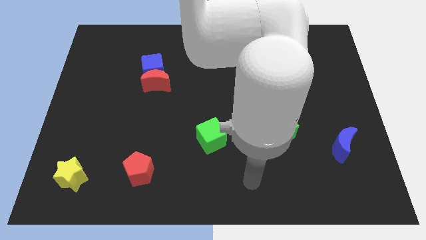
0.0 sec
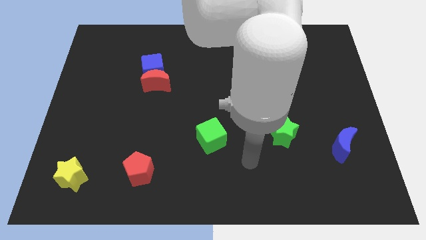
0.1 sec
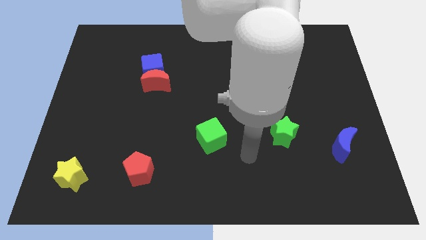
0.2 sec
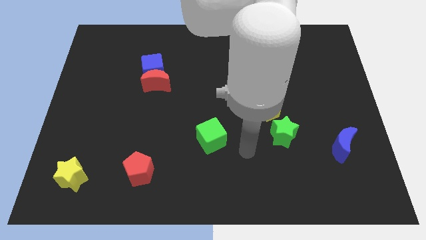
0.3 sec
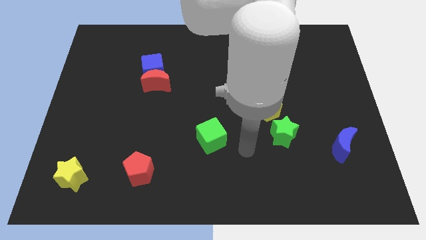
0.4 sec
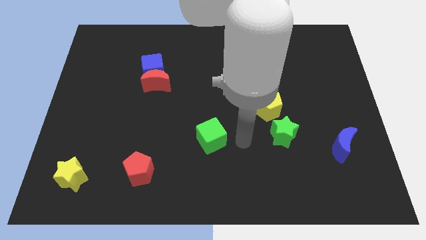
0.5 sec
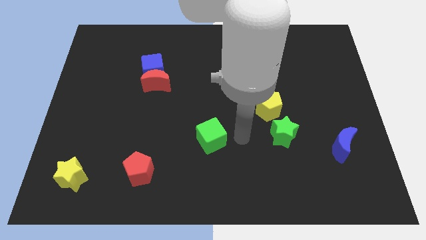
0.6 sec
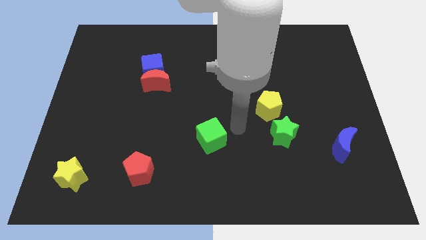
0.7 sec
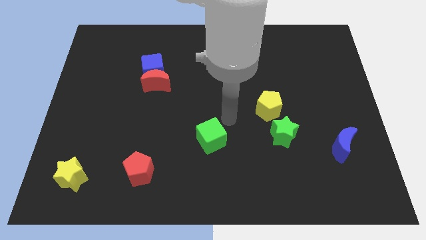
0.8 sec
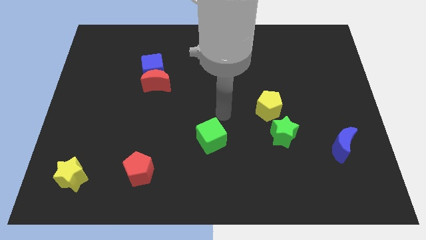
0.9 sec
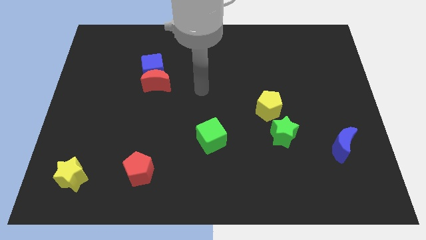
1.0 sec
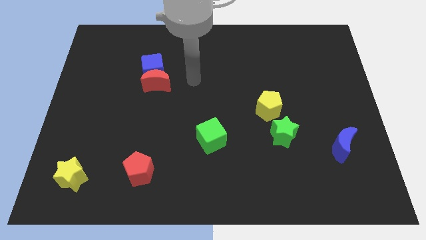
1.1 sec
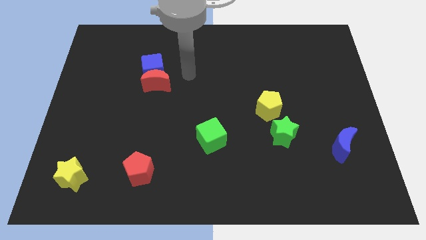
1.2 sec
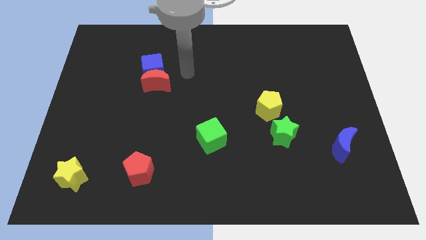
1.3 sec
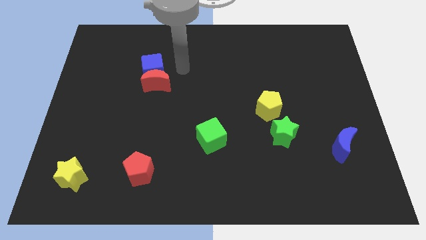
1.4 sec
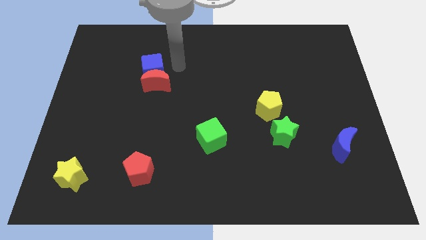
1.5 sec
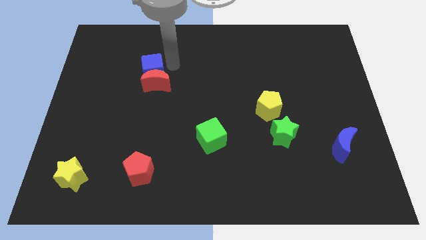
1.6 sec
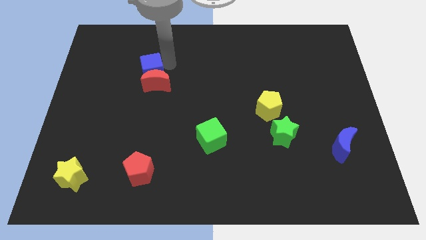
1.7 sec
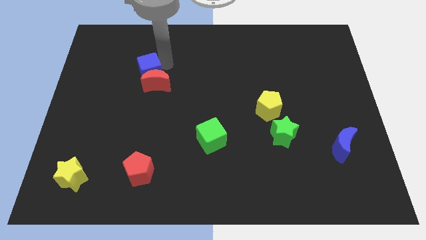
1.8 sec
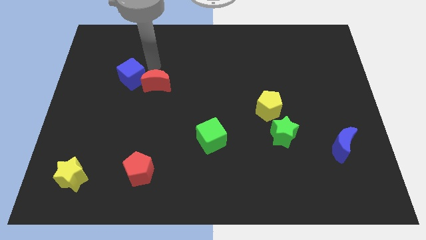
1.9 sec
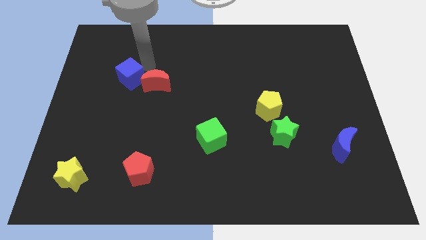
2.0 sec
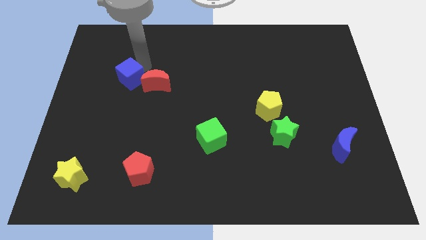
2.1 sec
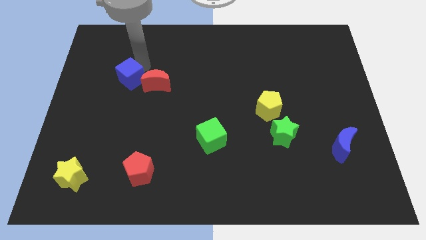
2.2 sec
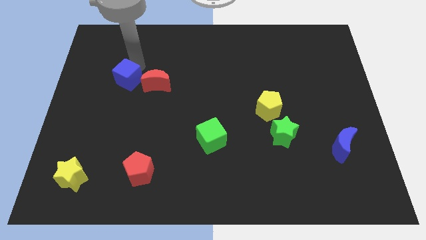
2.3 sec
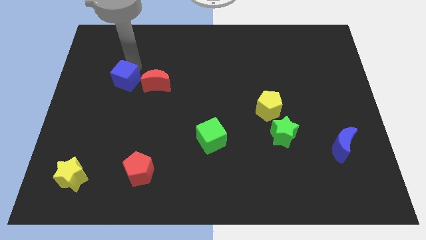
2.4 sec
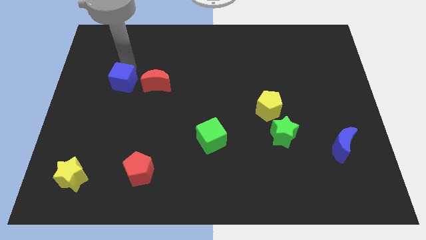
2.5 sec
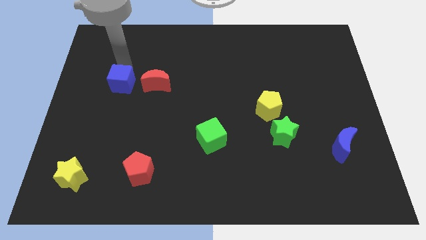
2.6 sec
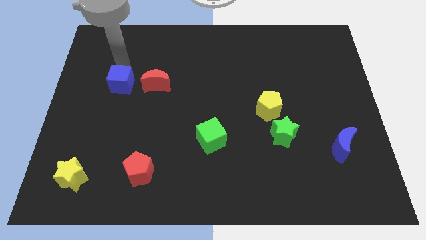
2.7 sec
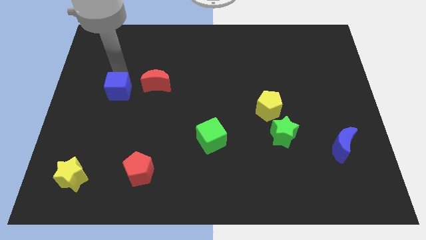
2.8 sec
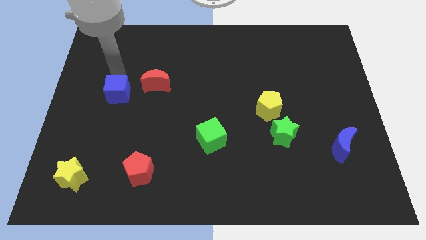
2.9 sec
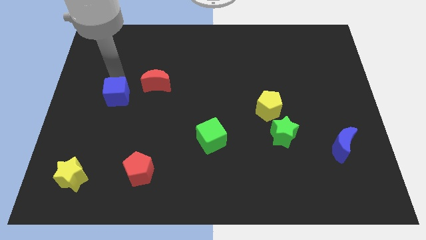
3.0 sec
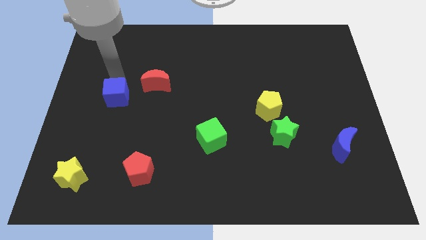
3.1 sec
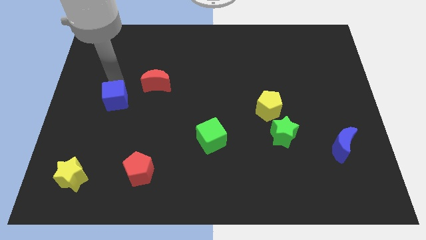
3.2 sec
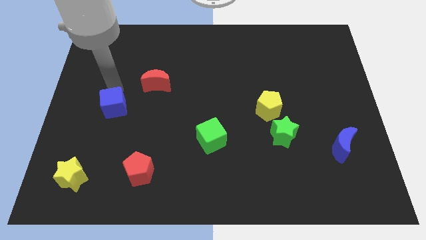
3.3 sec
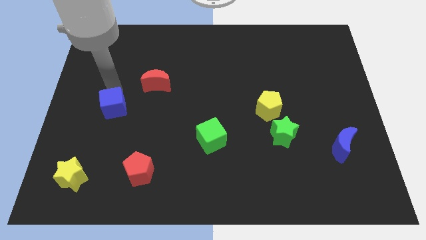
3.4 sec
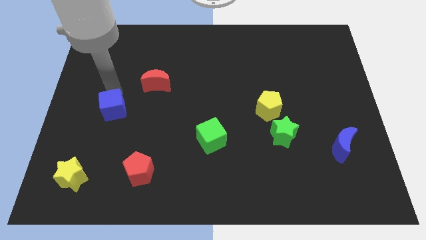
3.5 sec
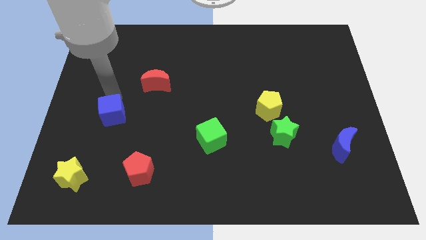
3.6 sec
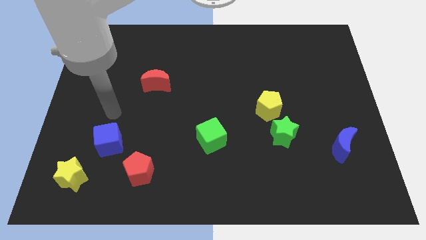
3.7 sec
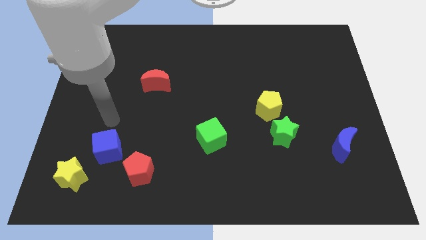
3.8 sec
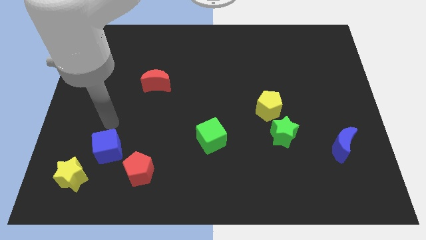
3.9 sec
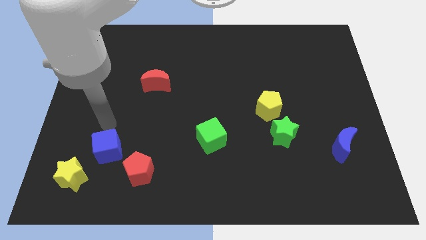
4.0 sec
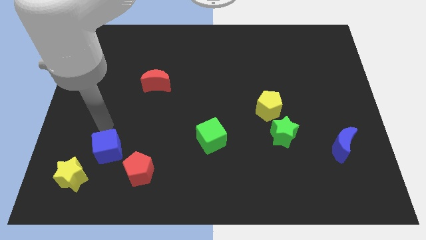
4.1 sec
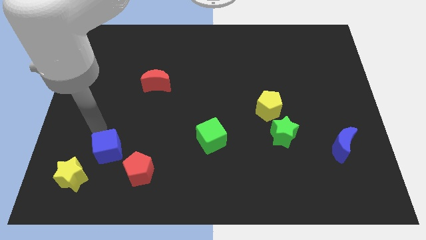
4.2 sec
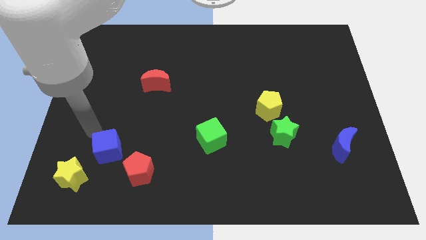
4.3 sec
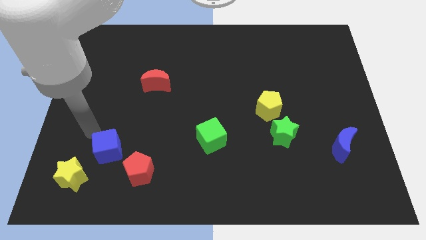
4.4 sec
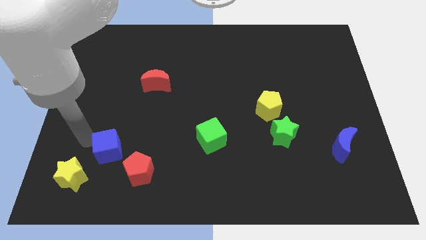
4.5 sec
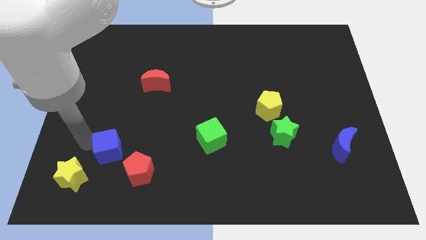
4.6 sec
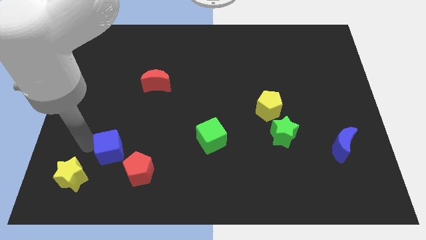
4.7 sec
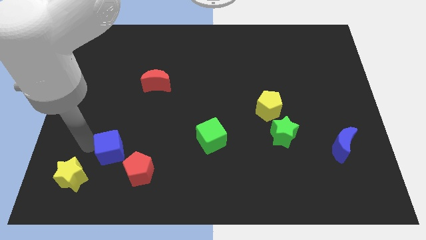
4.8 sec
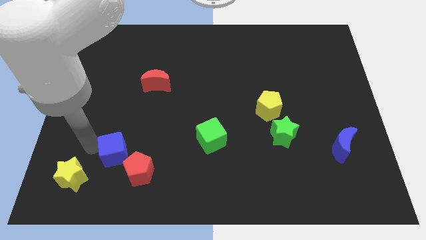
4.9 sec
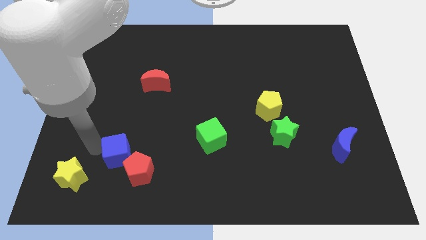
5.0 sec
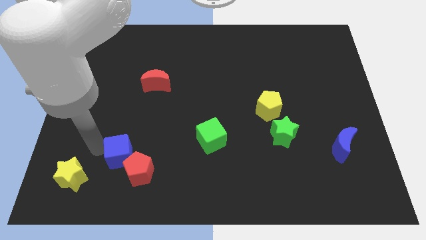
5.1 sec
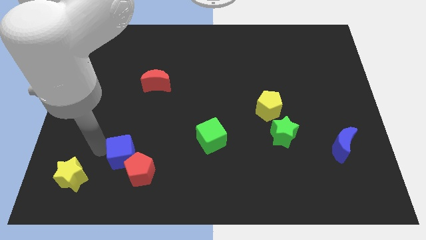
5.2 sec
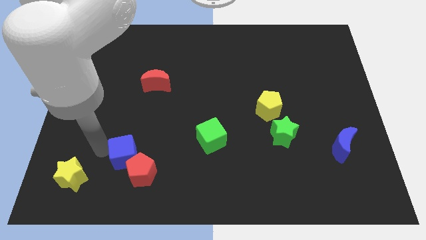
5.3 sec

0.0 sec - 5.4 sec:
push the blue cube towards the red pentagon

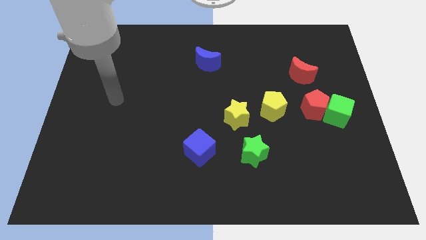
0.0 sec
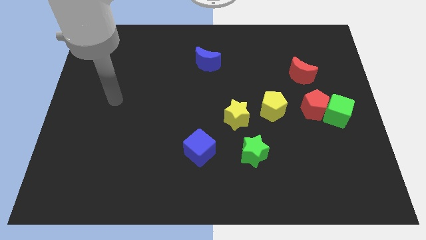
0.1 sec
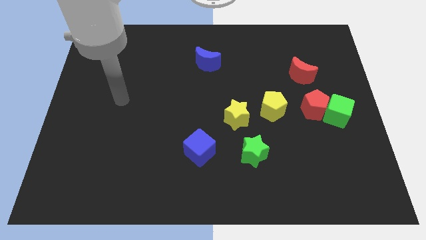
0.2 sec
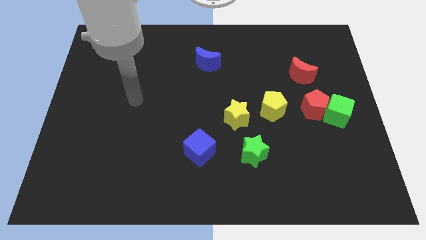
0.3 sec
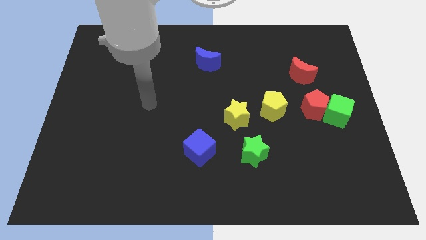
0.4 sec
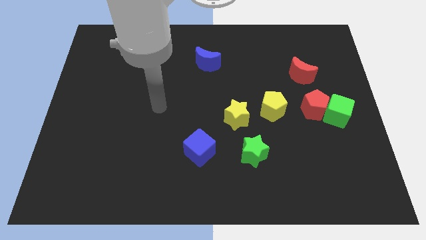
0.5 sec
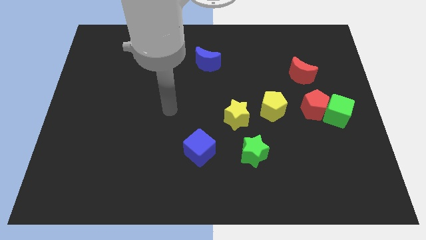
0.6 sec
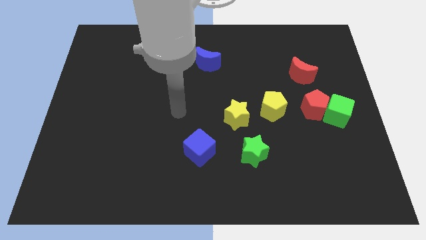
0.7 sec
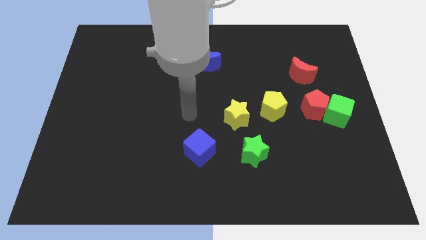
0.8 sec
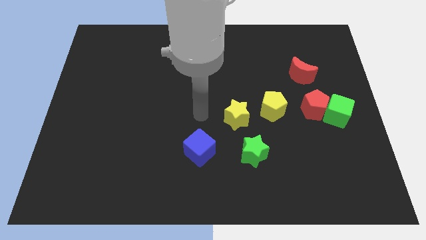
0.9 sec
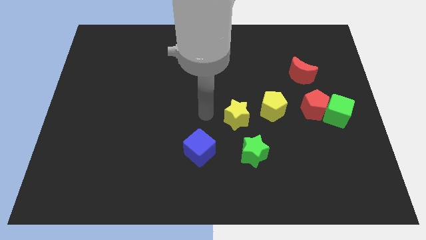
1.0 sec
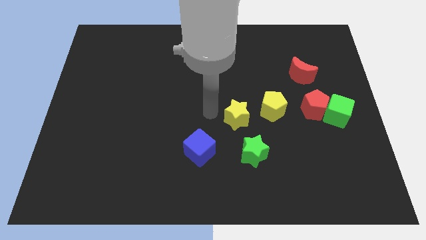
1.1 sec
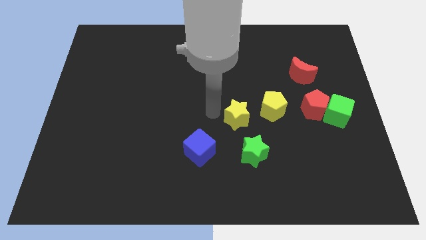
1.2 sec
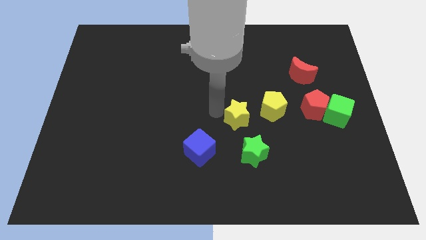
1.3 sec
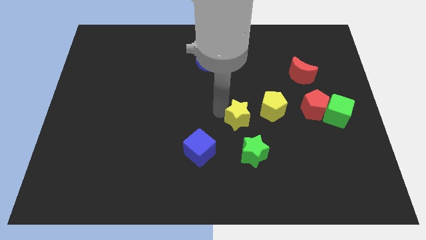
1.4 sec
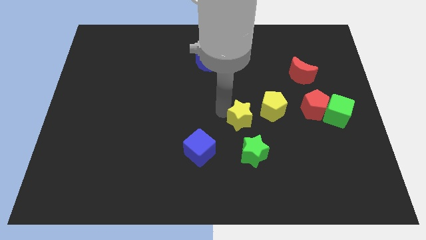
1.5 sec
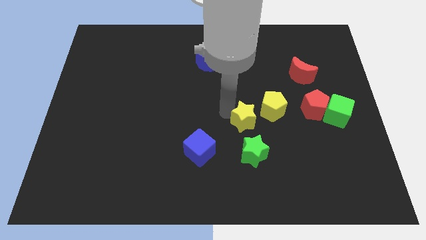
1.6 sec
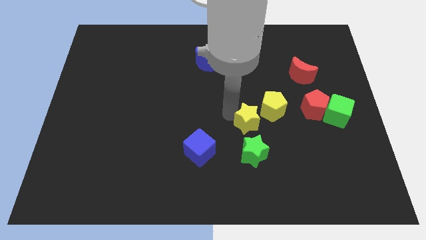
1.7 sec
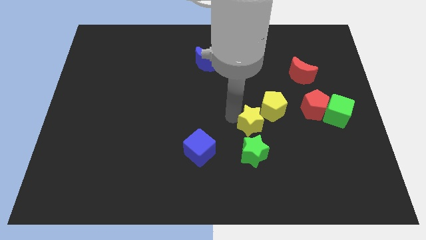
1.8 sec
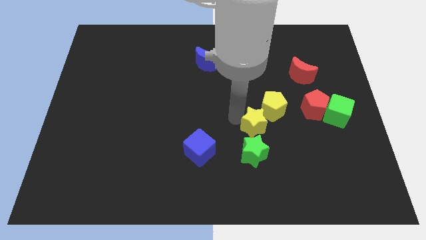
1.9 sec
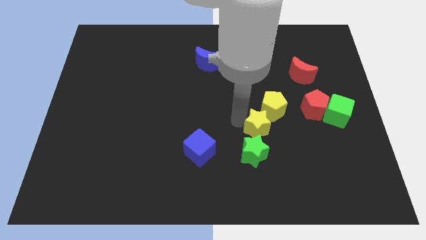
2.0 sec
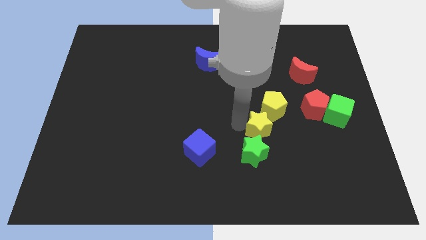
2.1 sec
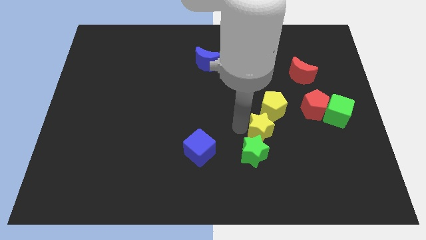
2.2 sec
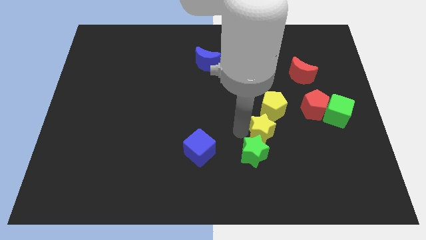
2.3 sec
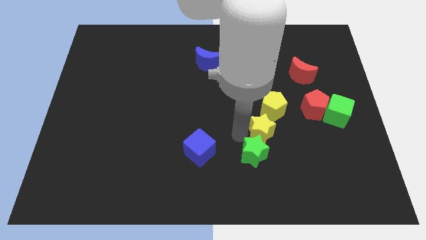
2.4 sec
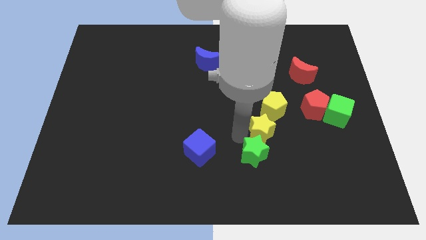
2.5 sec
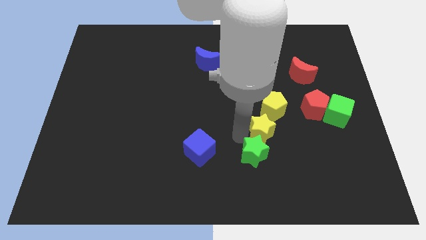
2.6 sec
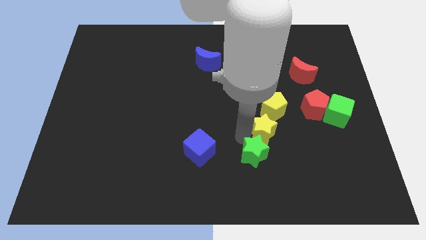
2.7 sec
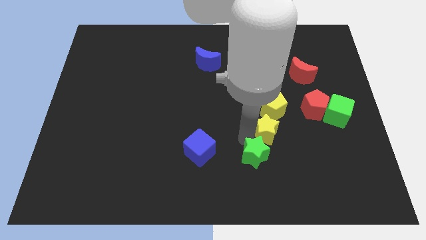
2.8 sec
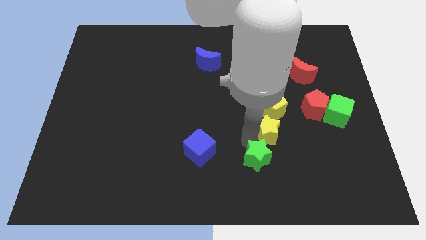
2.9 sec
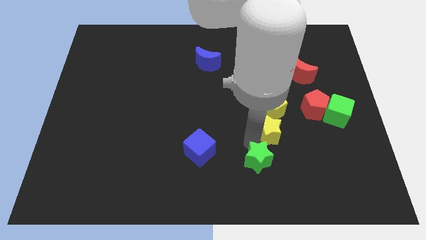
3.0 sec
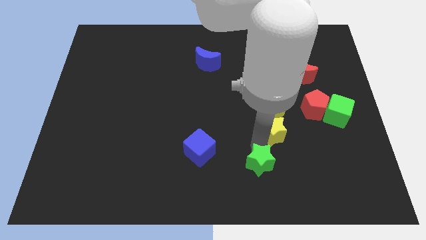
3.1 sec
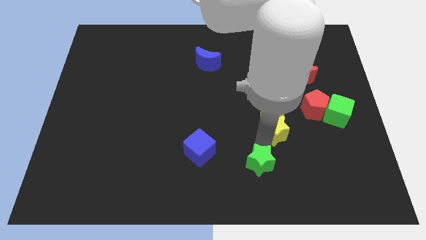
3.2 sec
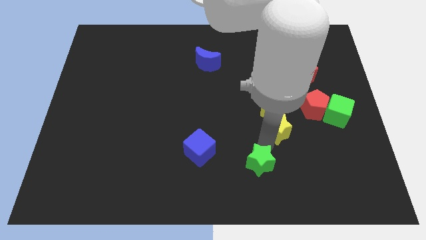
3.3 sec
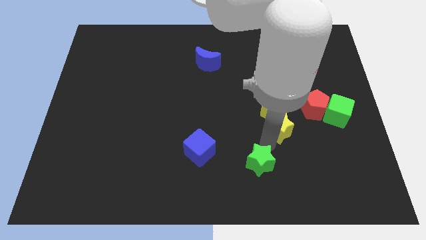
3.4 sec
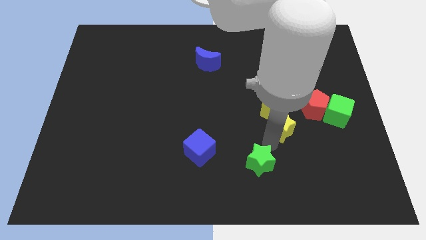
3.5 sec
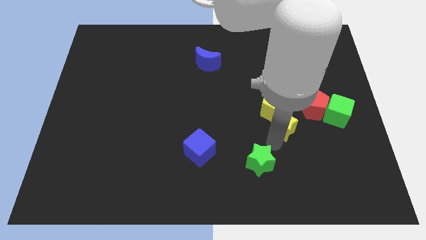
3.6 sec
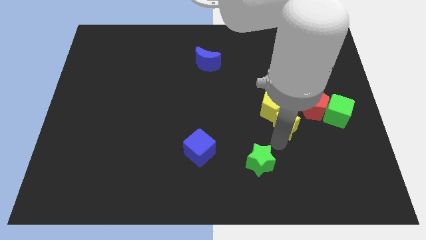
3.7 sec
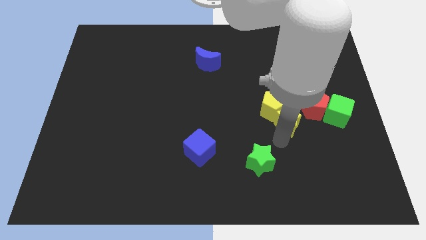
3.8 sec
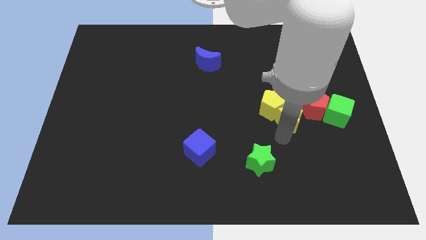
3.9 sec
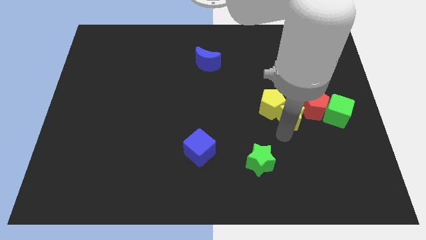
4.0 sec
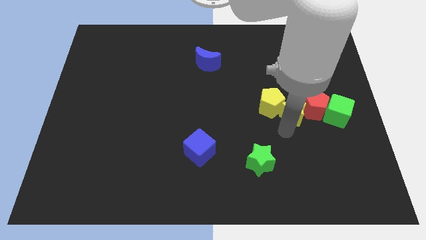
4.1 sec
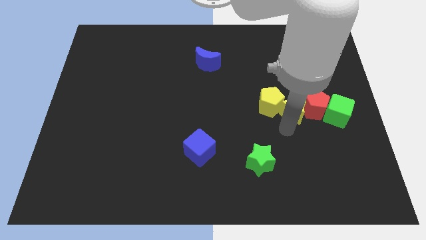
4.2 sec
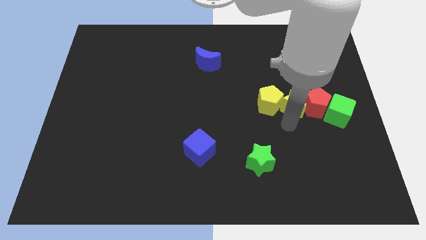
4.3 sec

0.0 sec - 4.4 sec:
slide the yellow star to the red pentagon
